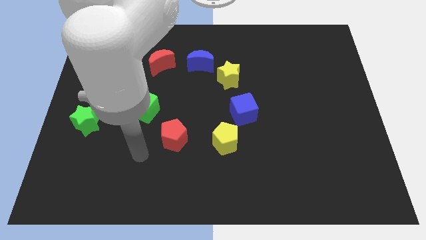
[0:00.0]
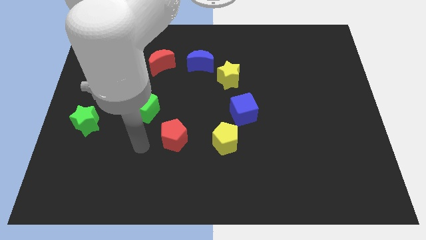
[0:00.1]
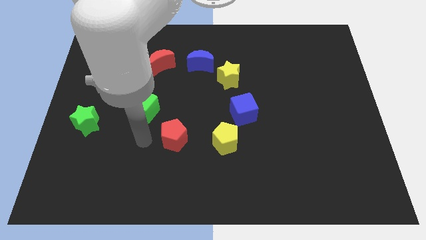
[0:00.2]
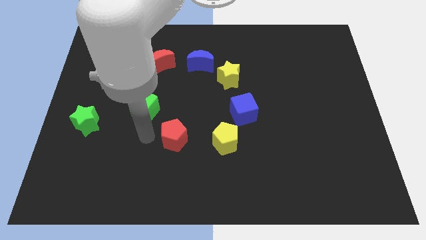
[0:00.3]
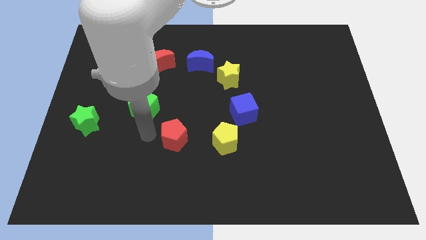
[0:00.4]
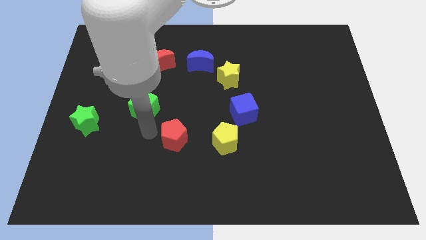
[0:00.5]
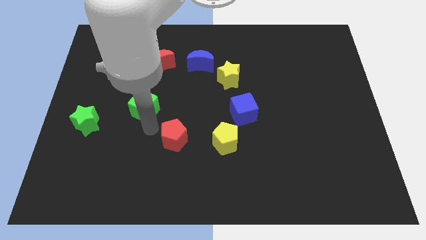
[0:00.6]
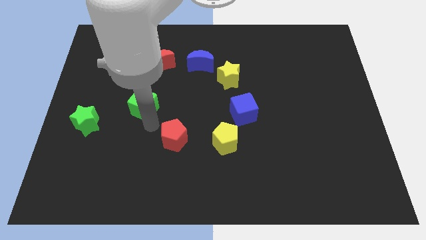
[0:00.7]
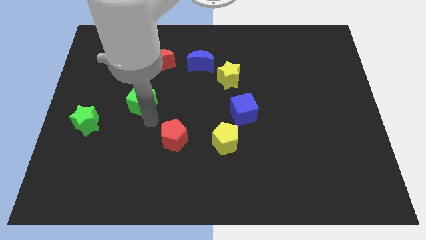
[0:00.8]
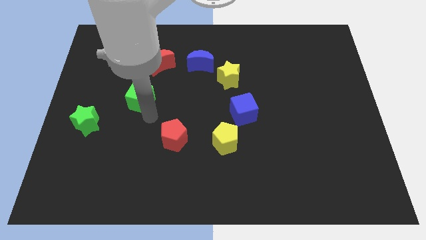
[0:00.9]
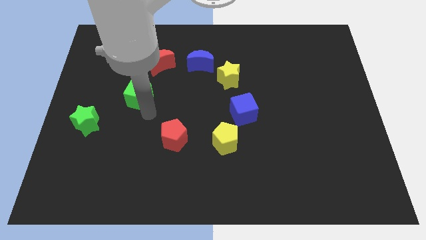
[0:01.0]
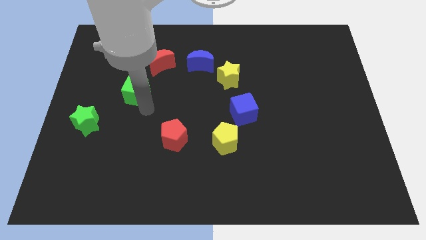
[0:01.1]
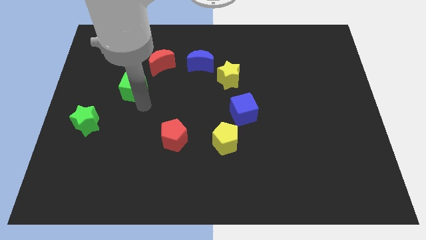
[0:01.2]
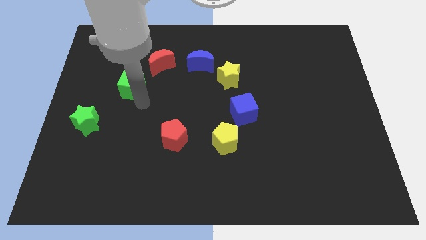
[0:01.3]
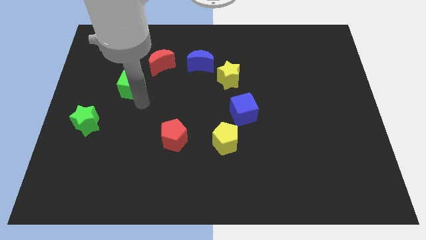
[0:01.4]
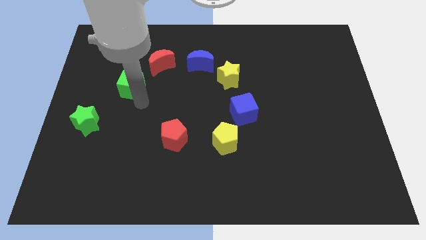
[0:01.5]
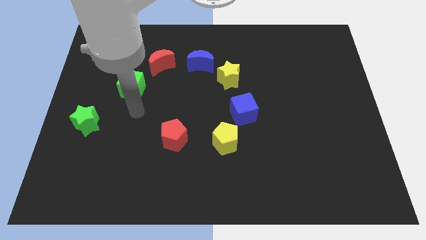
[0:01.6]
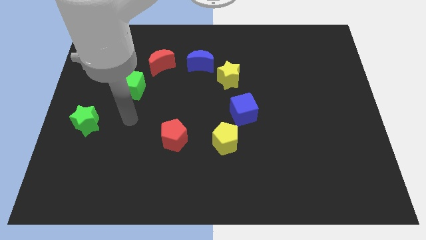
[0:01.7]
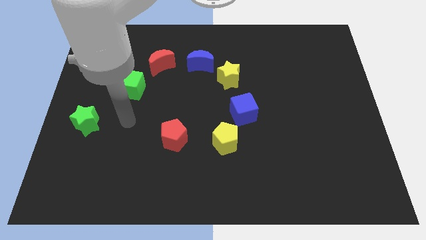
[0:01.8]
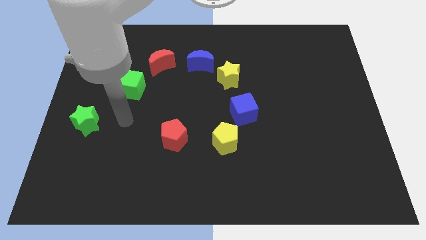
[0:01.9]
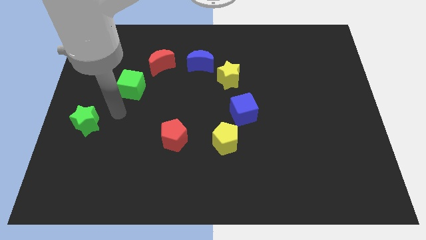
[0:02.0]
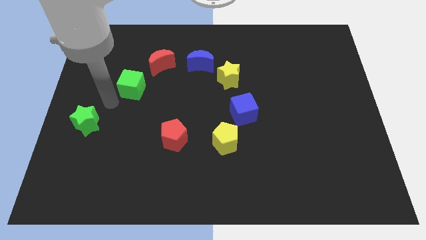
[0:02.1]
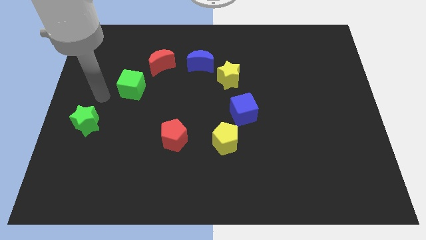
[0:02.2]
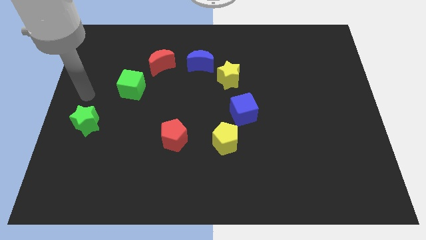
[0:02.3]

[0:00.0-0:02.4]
move green cube diagonally up

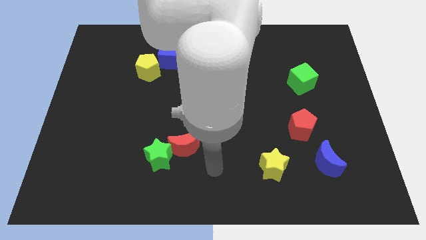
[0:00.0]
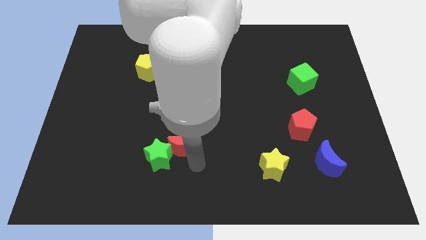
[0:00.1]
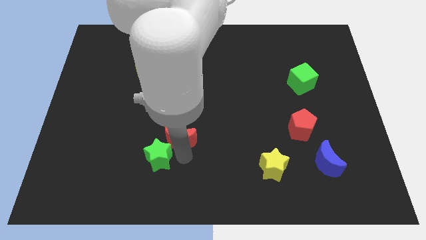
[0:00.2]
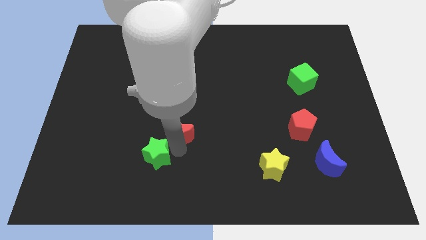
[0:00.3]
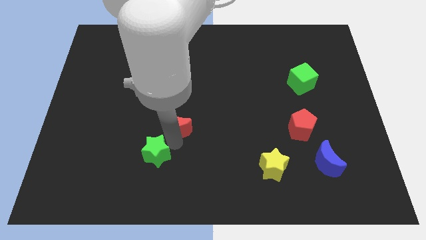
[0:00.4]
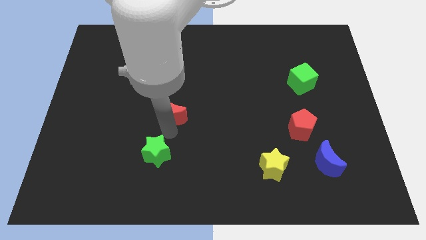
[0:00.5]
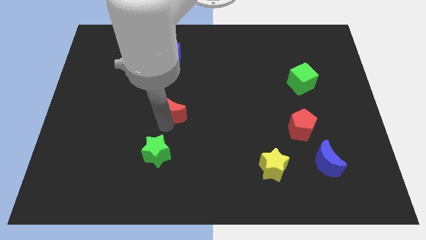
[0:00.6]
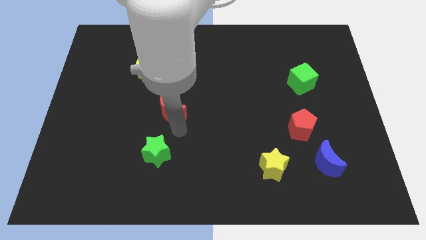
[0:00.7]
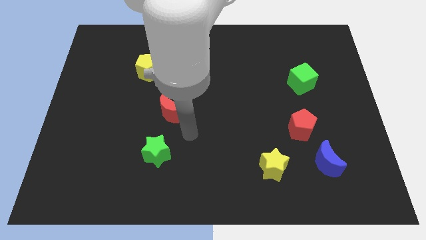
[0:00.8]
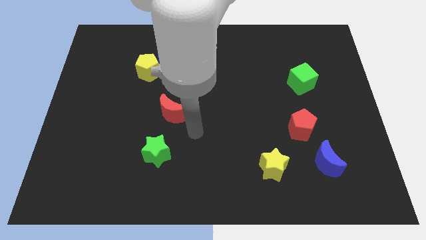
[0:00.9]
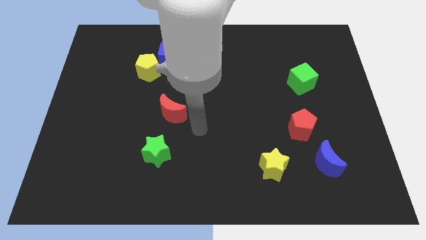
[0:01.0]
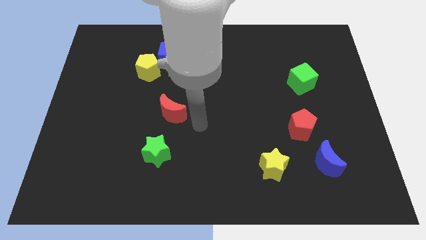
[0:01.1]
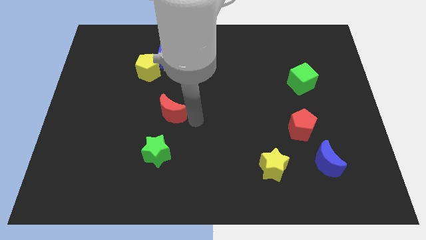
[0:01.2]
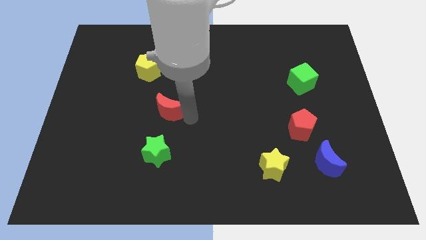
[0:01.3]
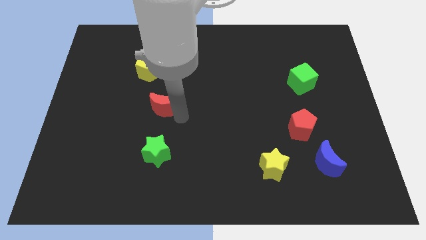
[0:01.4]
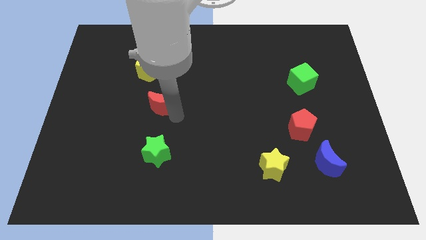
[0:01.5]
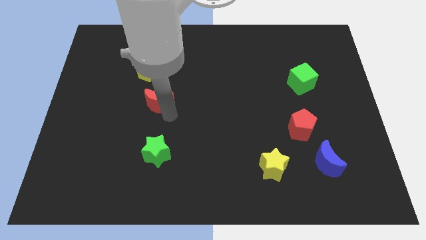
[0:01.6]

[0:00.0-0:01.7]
place the red moon in between the yellow pentagon and green star

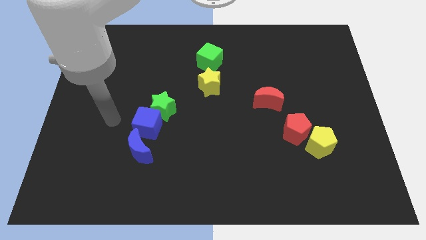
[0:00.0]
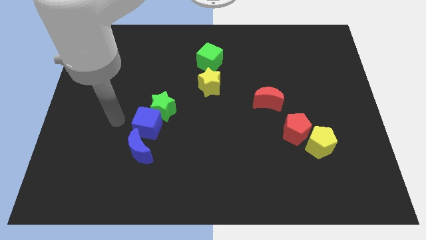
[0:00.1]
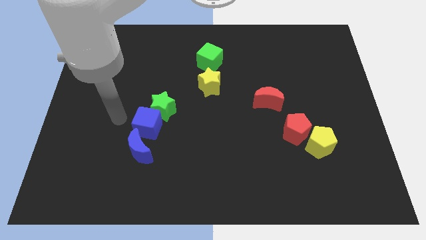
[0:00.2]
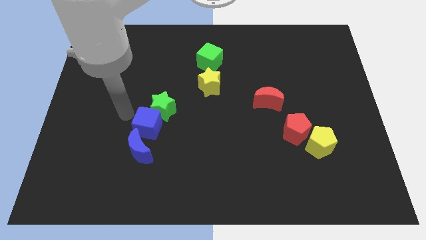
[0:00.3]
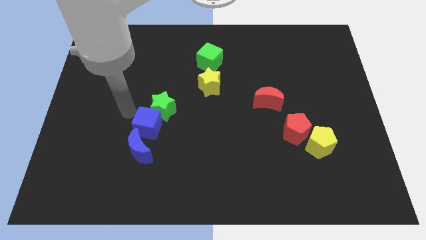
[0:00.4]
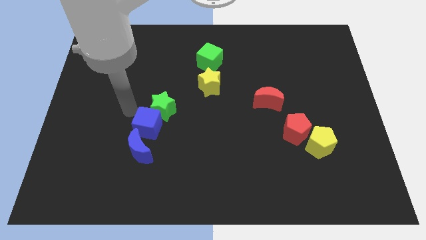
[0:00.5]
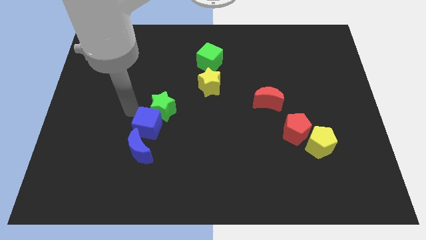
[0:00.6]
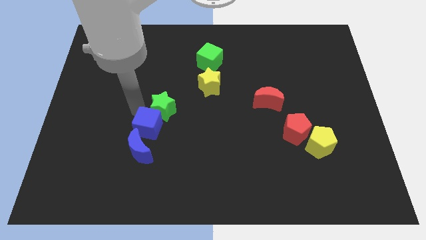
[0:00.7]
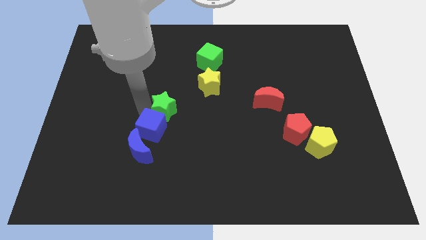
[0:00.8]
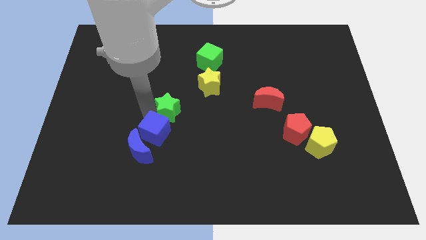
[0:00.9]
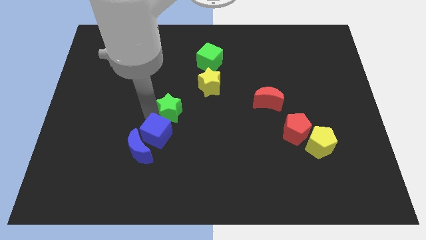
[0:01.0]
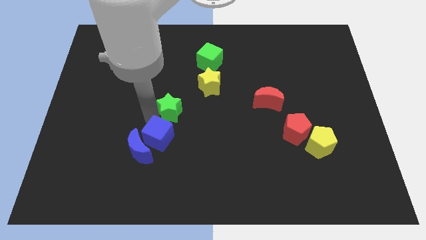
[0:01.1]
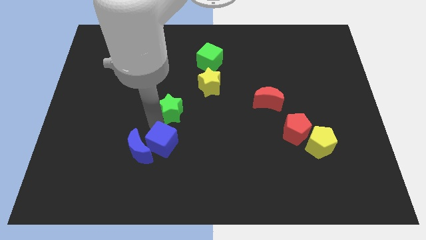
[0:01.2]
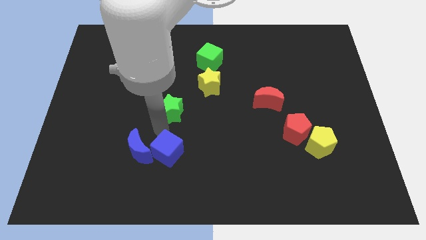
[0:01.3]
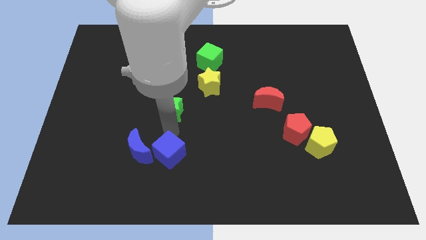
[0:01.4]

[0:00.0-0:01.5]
place a blue cube to the right of the blue moon

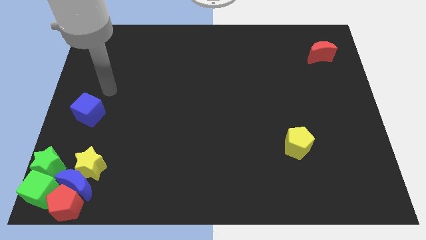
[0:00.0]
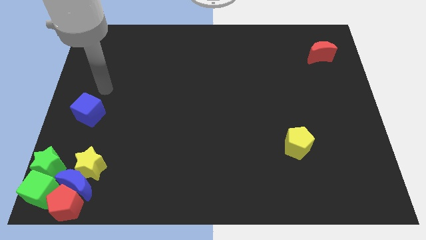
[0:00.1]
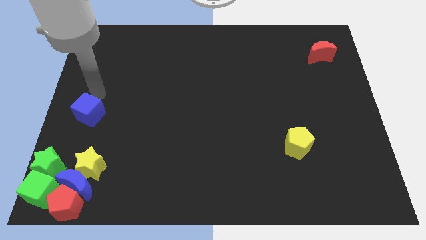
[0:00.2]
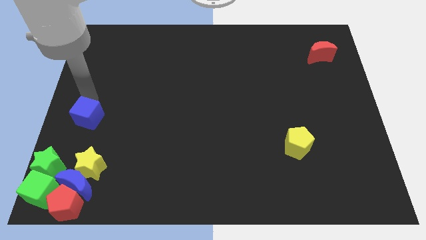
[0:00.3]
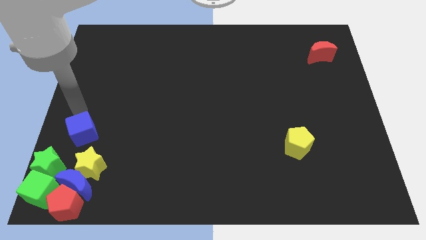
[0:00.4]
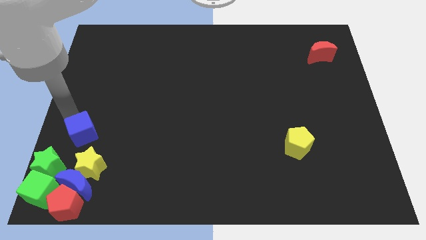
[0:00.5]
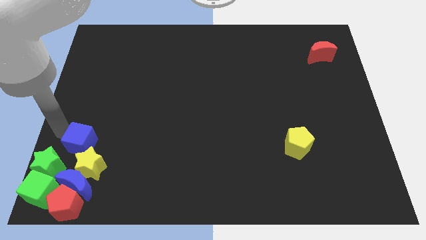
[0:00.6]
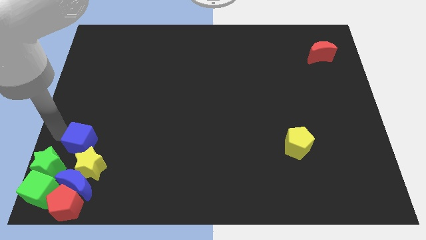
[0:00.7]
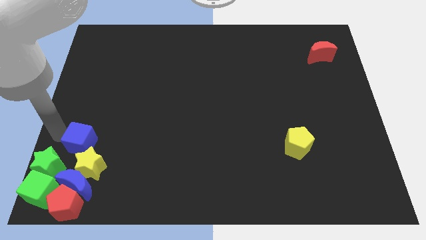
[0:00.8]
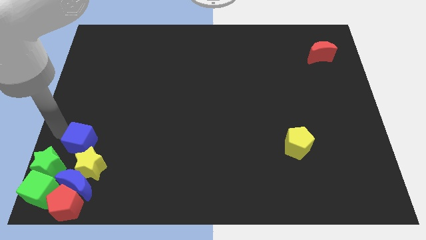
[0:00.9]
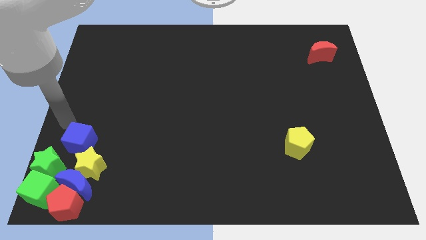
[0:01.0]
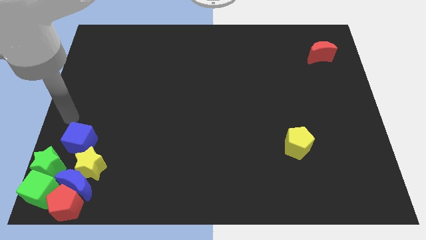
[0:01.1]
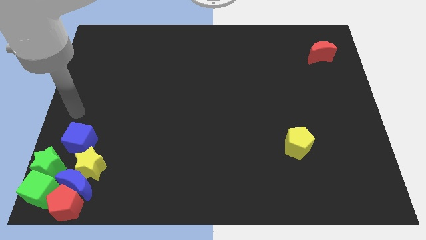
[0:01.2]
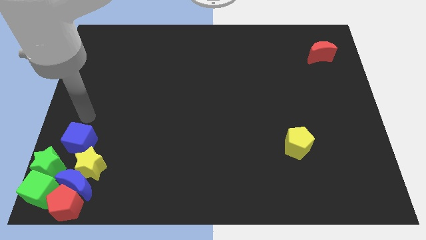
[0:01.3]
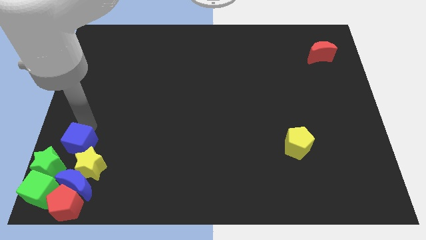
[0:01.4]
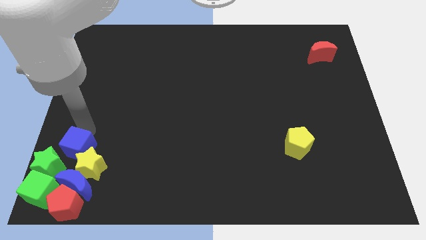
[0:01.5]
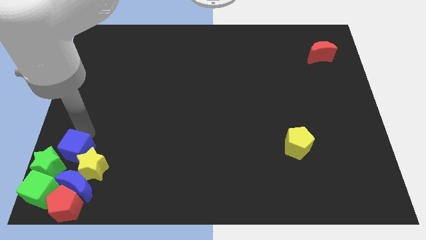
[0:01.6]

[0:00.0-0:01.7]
push the blue cube into the yellow star

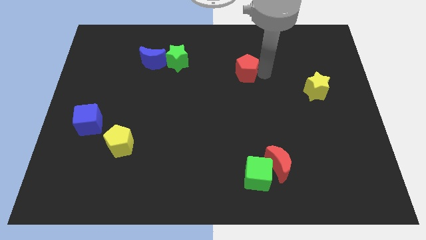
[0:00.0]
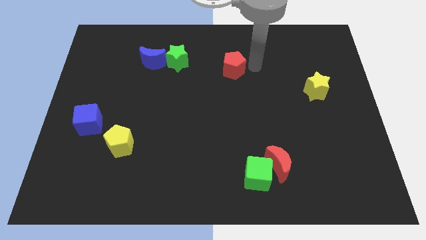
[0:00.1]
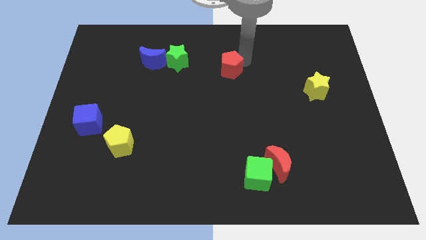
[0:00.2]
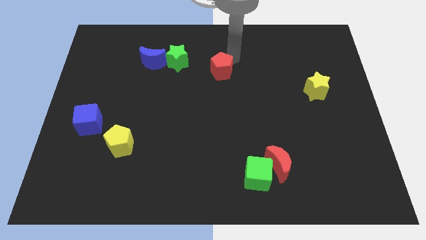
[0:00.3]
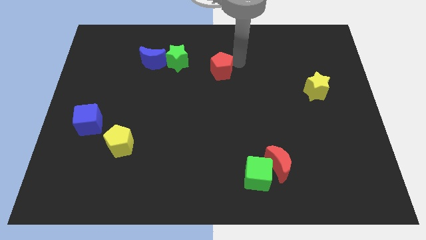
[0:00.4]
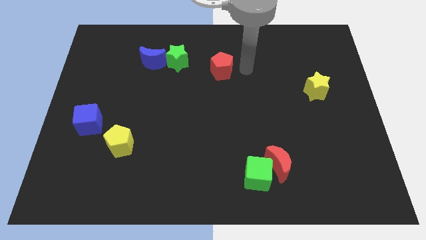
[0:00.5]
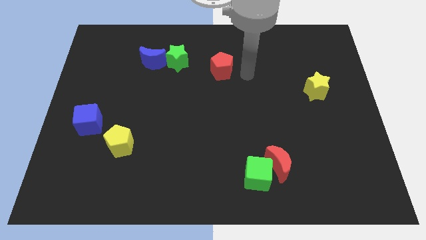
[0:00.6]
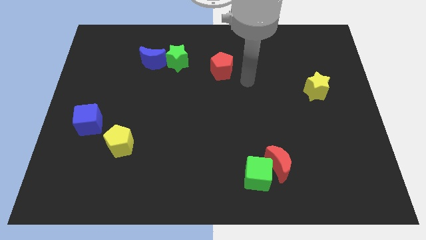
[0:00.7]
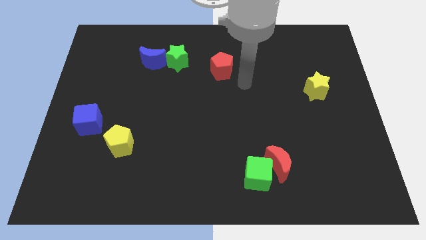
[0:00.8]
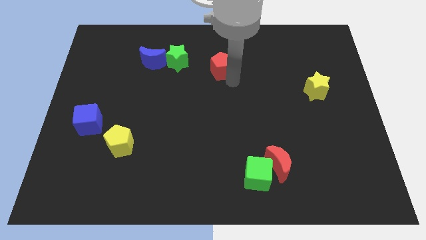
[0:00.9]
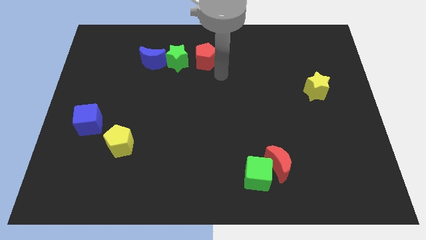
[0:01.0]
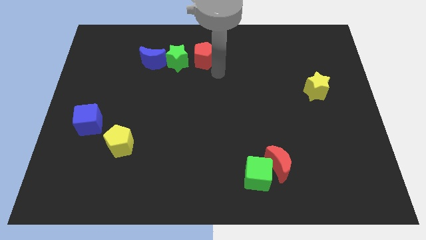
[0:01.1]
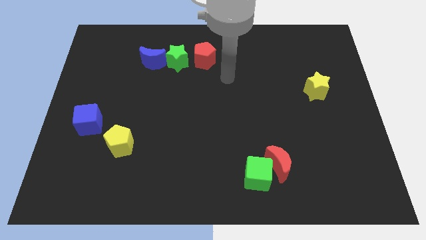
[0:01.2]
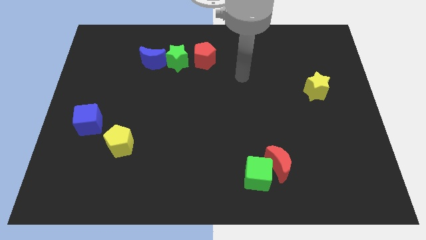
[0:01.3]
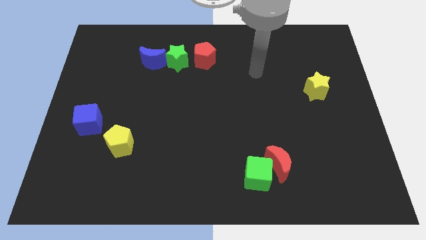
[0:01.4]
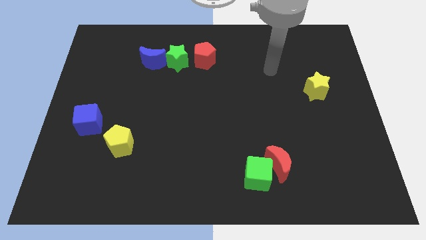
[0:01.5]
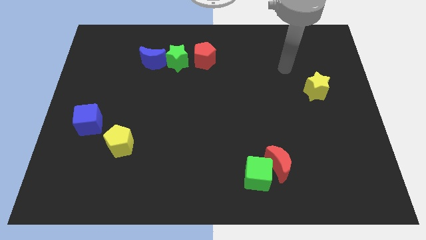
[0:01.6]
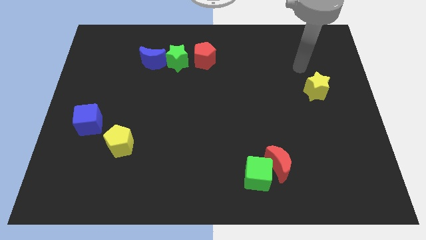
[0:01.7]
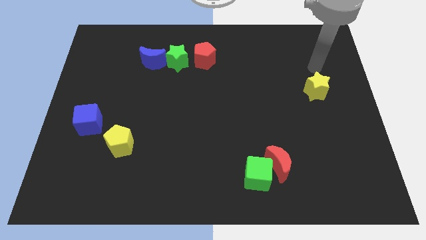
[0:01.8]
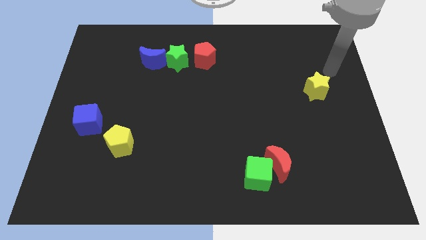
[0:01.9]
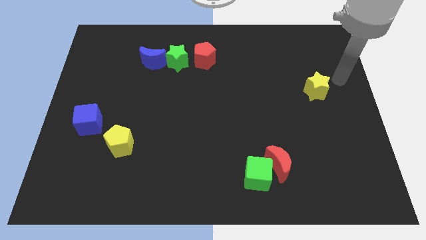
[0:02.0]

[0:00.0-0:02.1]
place the red pentagon at the right of the green star
